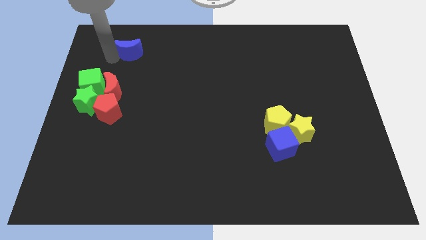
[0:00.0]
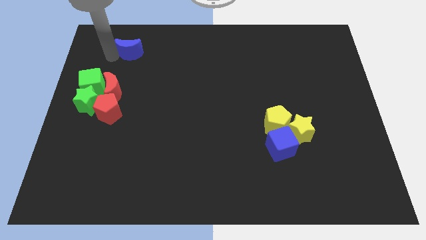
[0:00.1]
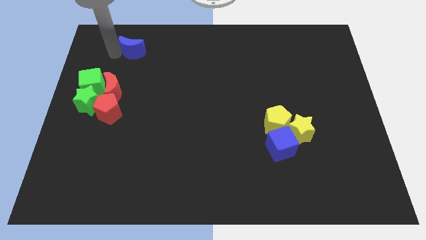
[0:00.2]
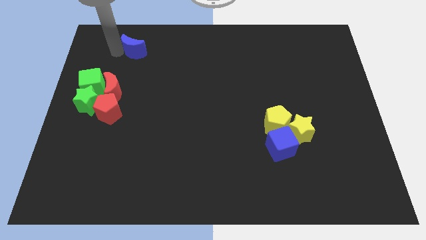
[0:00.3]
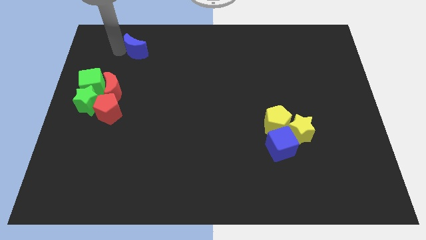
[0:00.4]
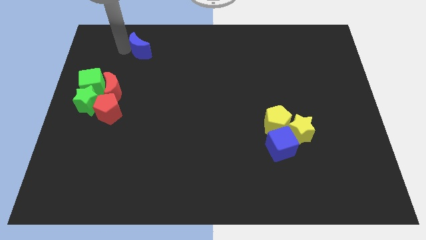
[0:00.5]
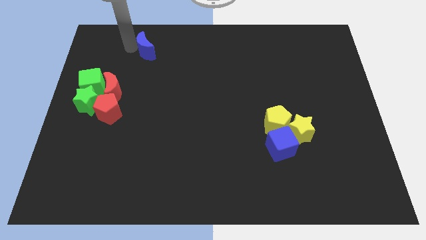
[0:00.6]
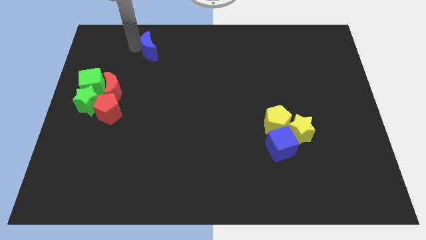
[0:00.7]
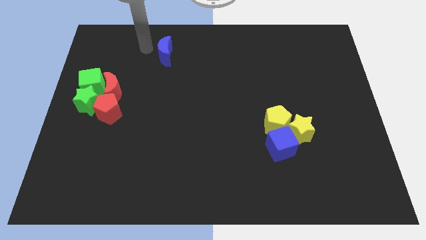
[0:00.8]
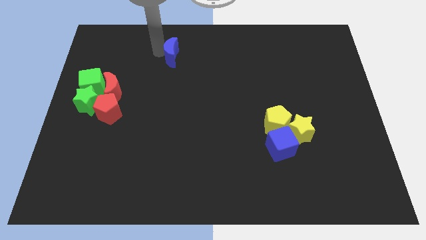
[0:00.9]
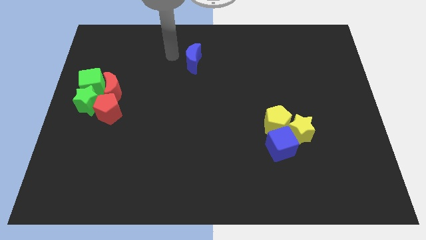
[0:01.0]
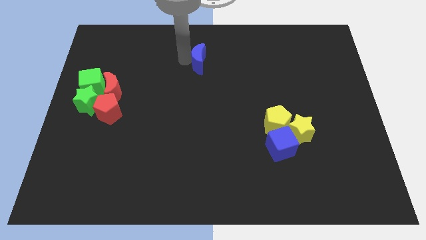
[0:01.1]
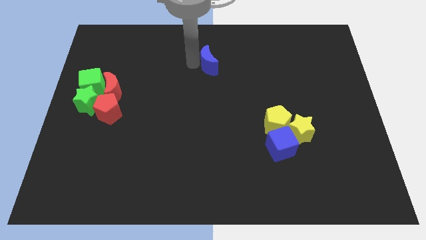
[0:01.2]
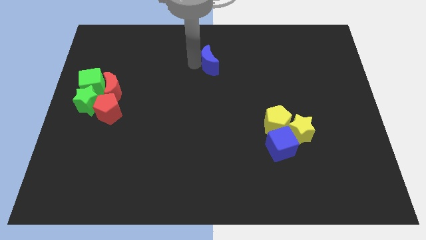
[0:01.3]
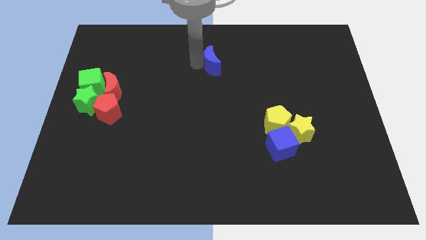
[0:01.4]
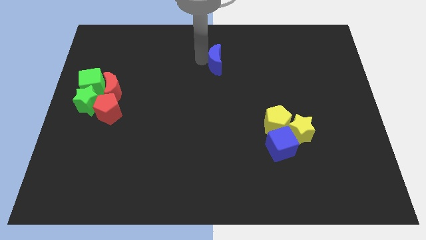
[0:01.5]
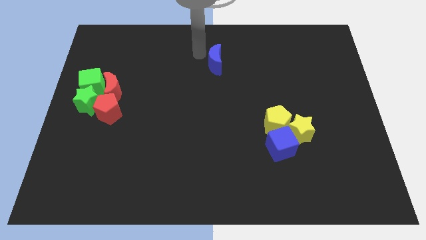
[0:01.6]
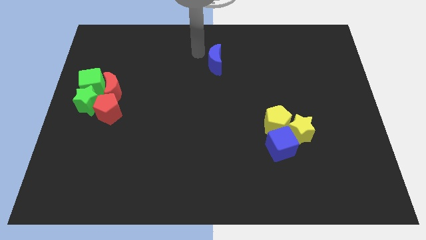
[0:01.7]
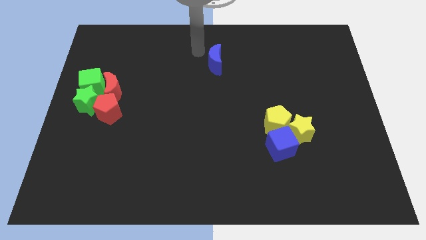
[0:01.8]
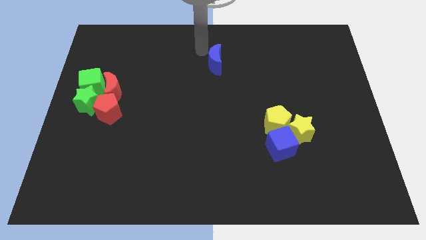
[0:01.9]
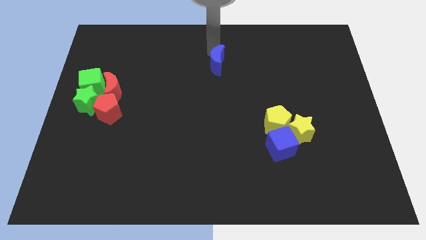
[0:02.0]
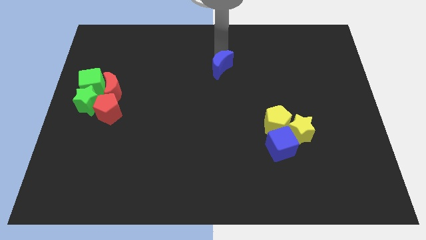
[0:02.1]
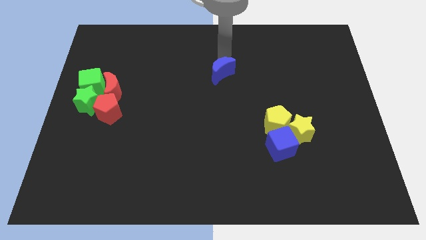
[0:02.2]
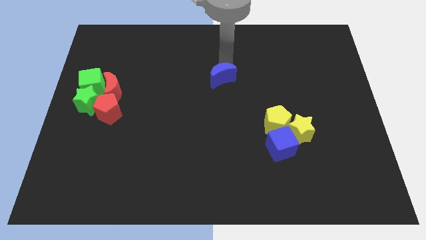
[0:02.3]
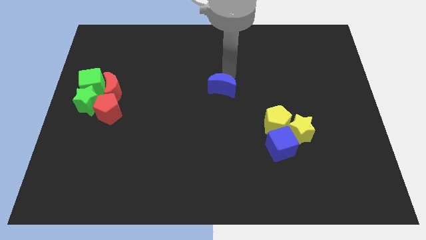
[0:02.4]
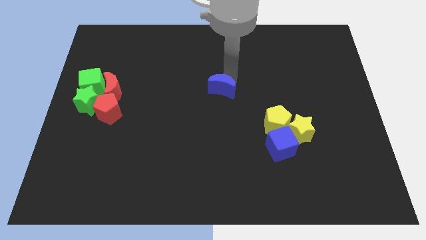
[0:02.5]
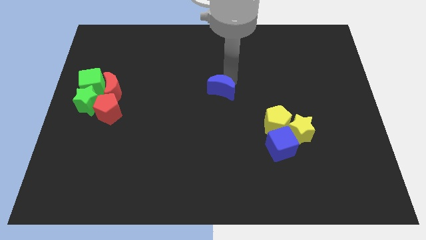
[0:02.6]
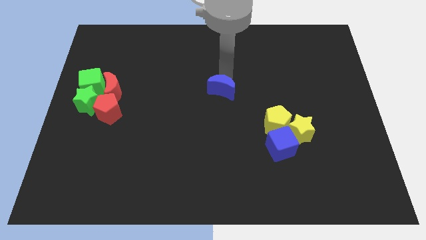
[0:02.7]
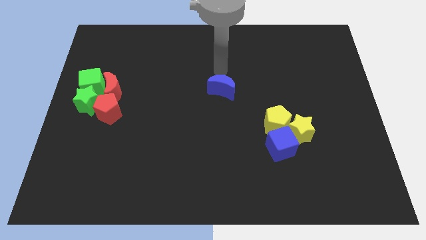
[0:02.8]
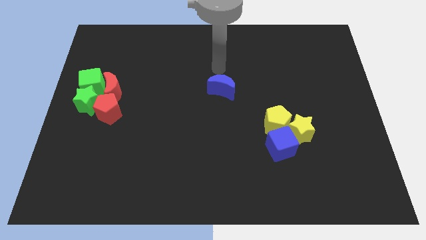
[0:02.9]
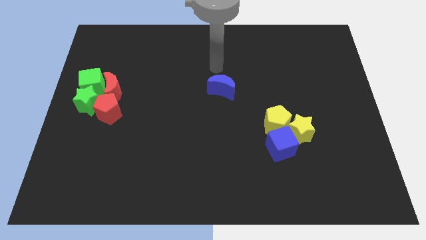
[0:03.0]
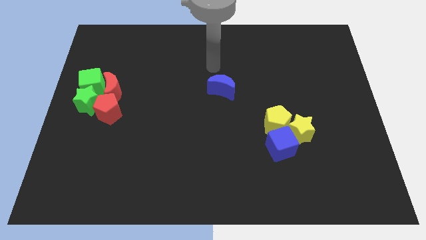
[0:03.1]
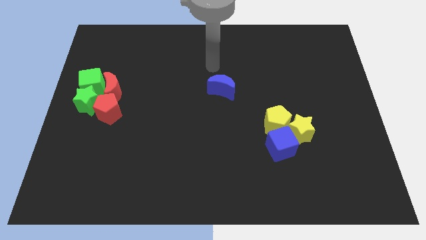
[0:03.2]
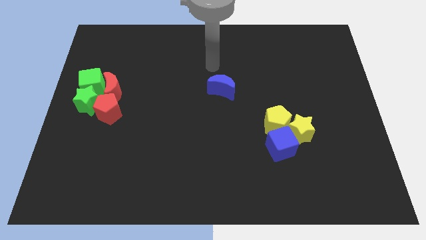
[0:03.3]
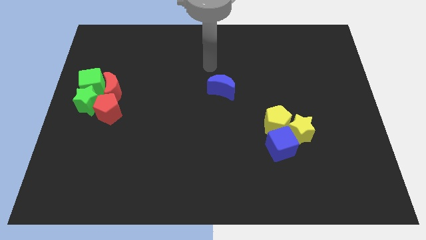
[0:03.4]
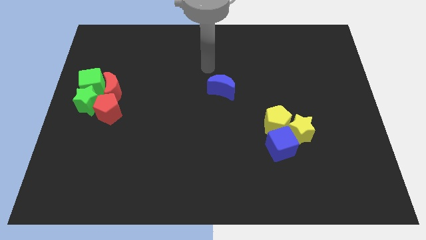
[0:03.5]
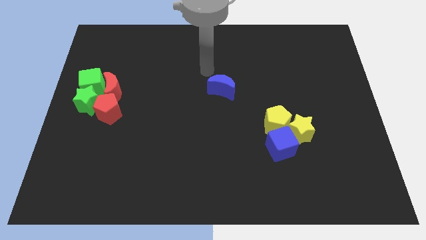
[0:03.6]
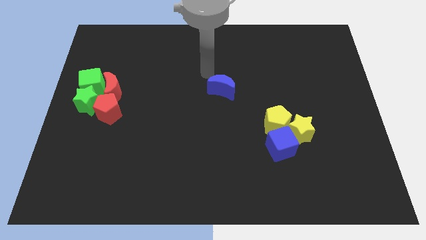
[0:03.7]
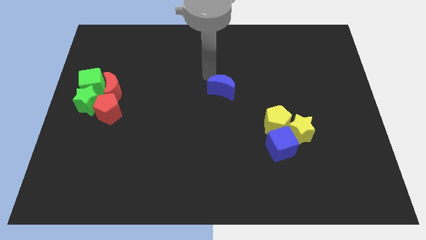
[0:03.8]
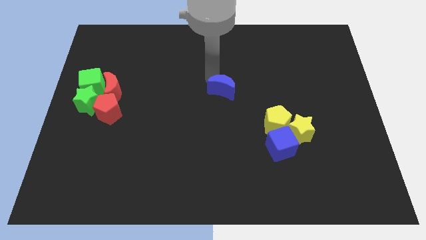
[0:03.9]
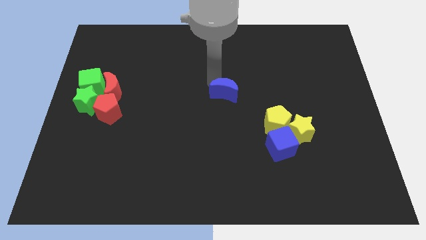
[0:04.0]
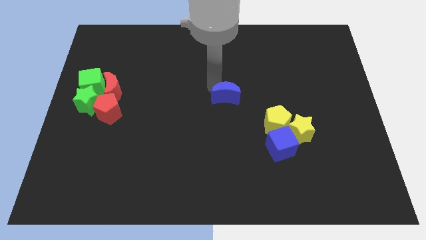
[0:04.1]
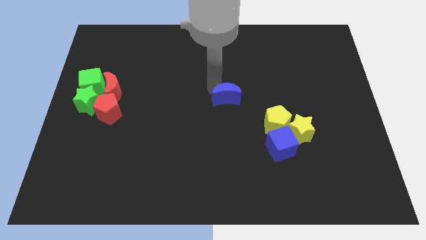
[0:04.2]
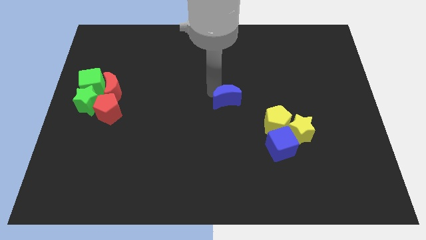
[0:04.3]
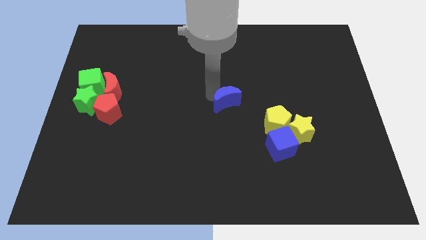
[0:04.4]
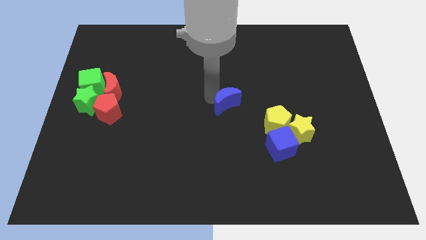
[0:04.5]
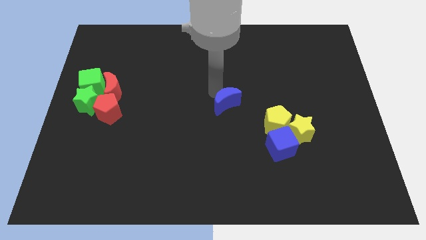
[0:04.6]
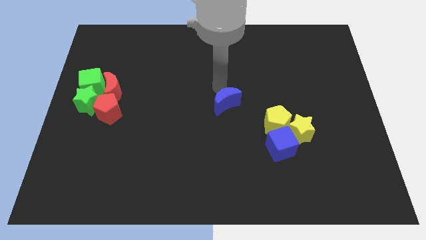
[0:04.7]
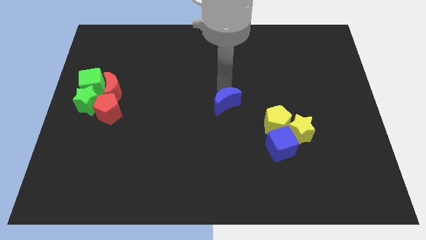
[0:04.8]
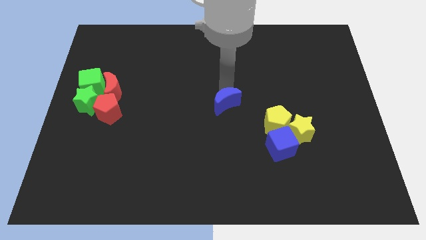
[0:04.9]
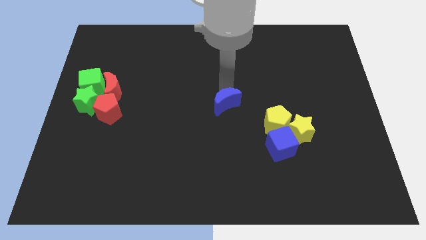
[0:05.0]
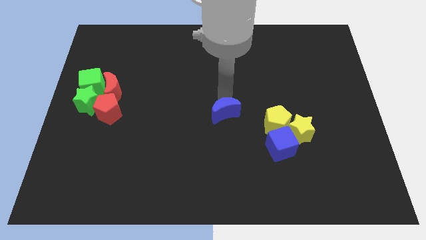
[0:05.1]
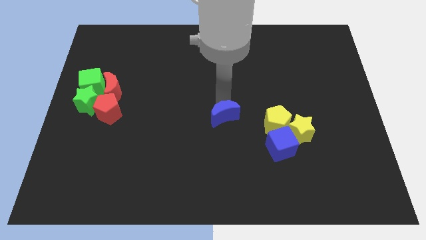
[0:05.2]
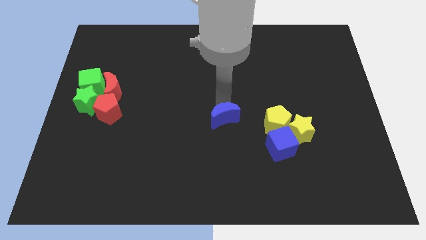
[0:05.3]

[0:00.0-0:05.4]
place the blue crescent to the center of the board

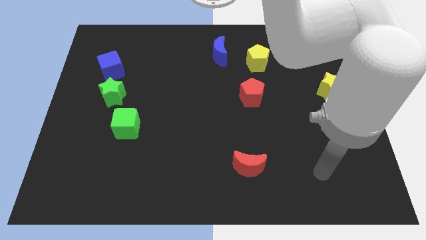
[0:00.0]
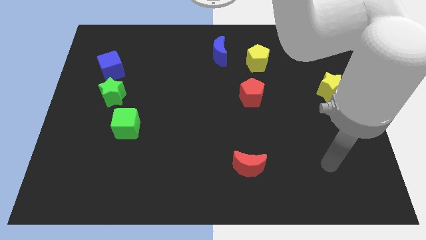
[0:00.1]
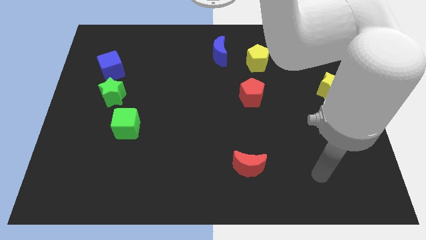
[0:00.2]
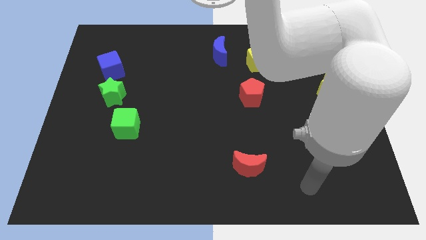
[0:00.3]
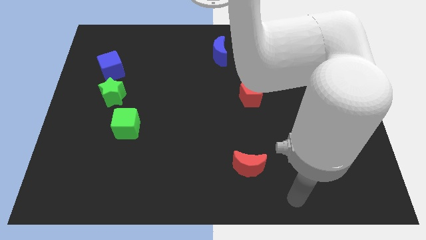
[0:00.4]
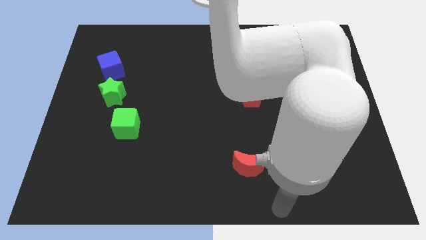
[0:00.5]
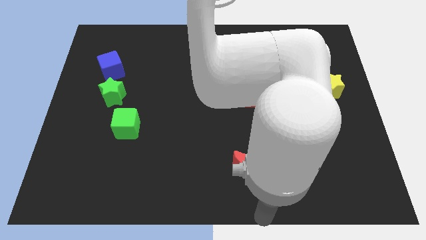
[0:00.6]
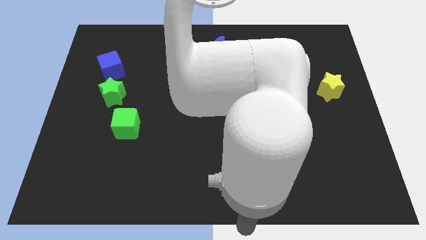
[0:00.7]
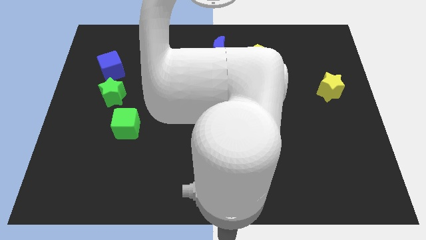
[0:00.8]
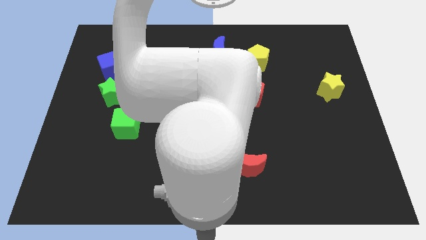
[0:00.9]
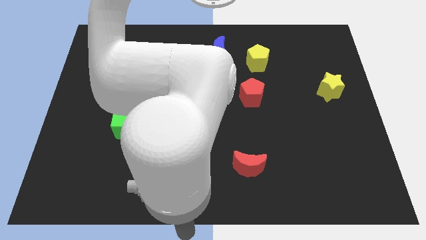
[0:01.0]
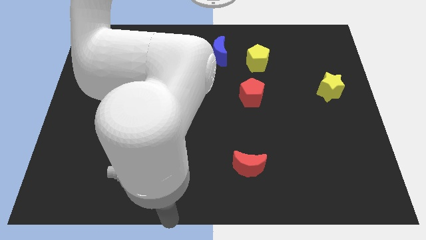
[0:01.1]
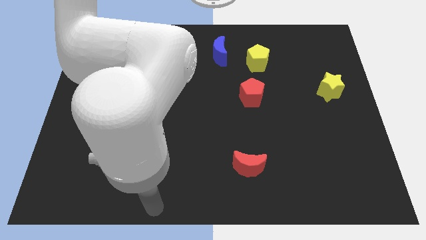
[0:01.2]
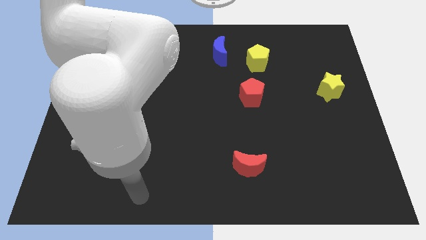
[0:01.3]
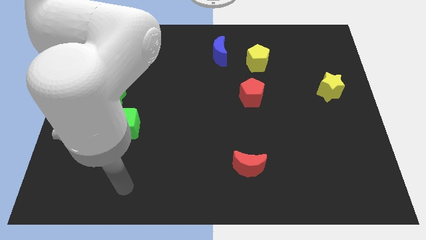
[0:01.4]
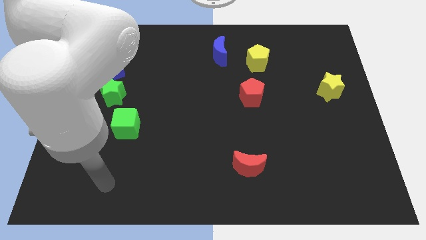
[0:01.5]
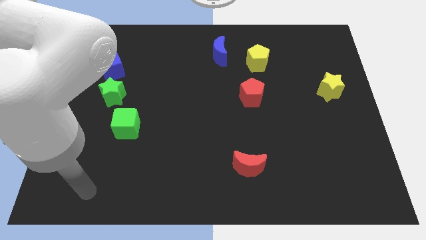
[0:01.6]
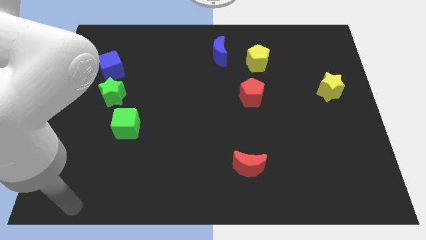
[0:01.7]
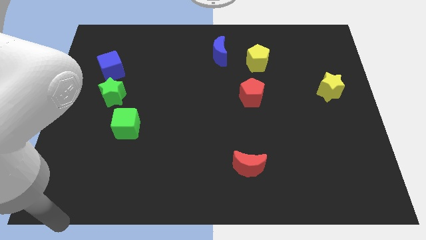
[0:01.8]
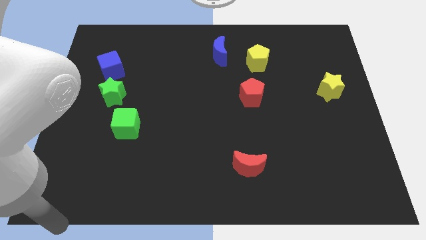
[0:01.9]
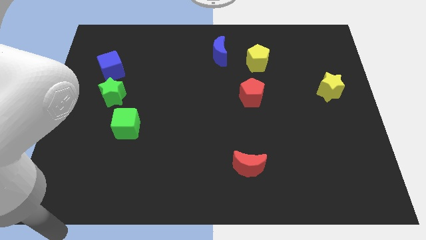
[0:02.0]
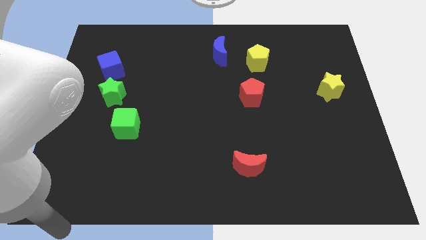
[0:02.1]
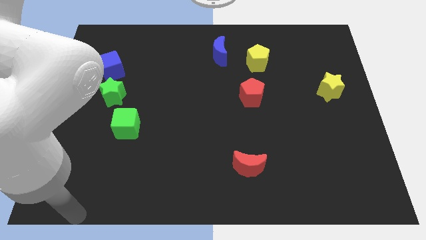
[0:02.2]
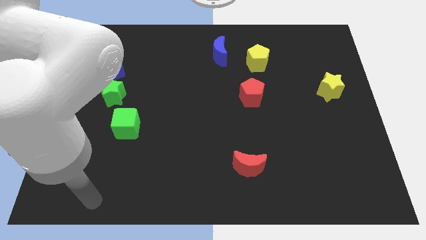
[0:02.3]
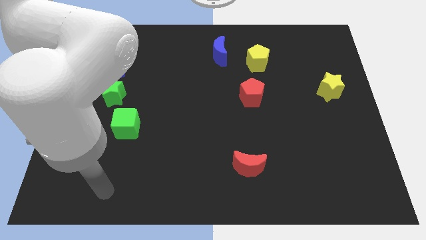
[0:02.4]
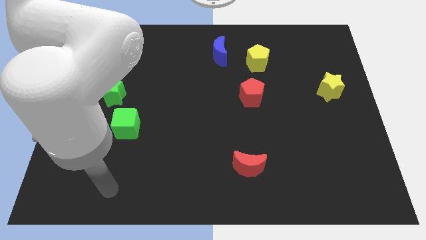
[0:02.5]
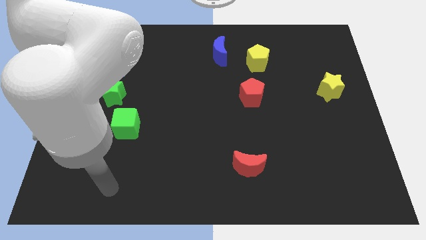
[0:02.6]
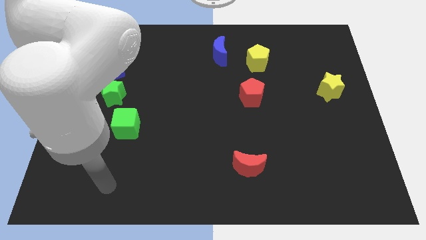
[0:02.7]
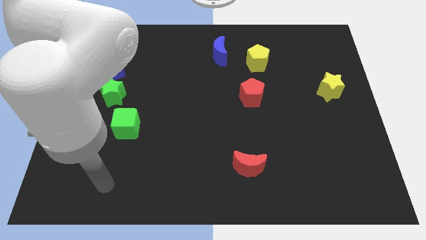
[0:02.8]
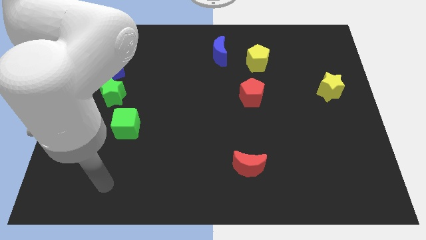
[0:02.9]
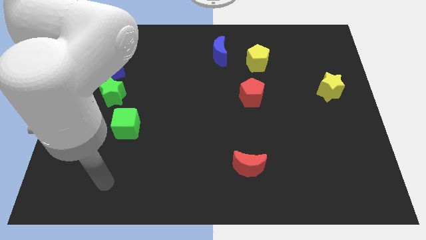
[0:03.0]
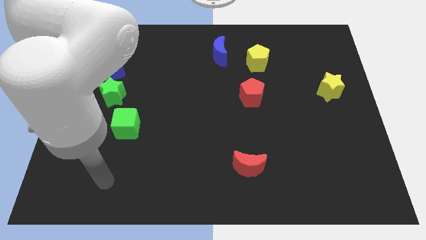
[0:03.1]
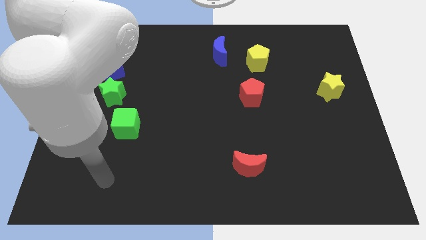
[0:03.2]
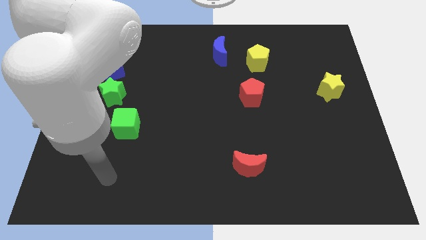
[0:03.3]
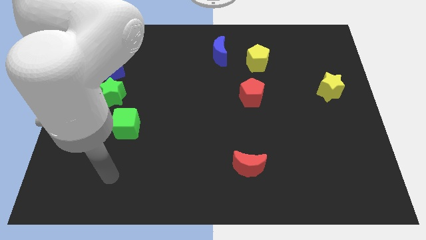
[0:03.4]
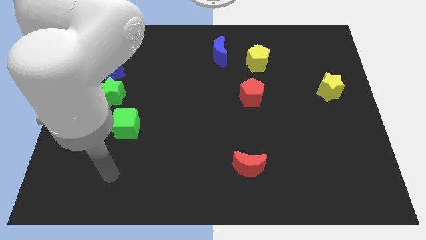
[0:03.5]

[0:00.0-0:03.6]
go to the bottom side of the green cube
